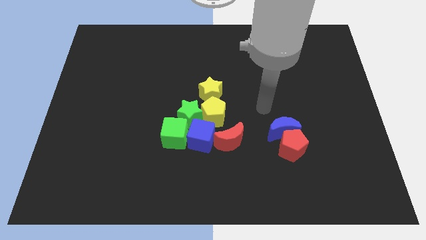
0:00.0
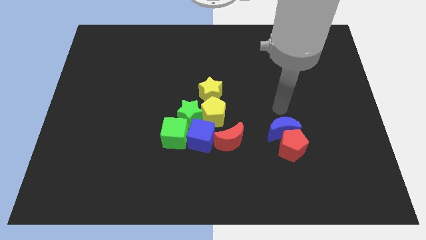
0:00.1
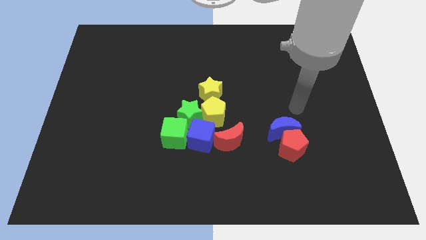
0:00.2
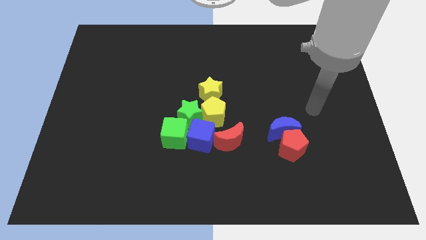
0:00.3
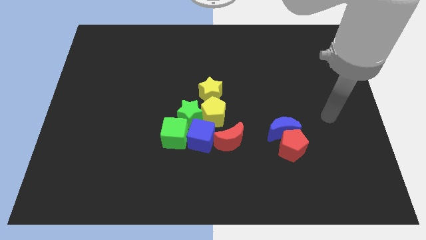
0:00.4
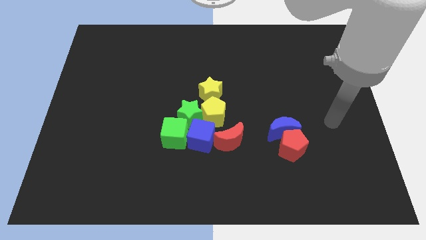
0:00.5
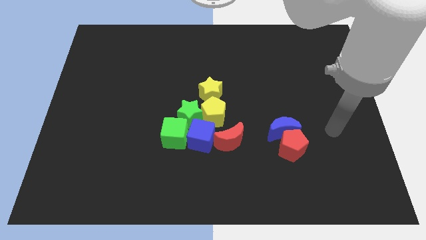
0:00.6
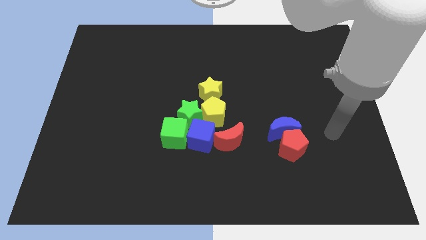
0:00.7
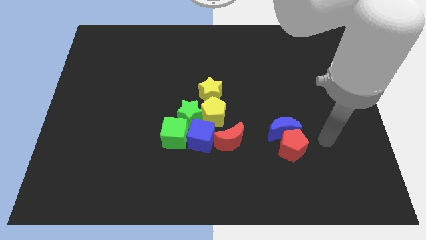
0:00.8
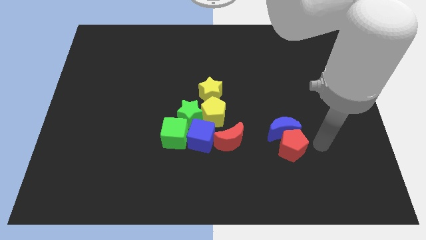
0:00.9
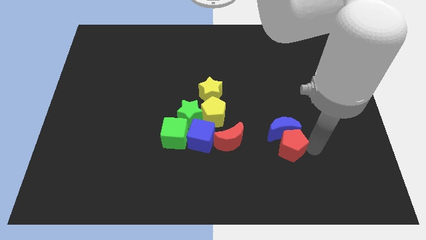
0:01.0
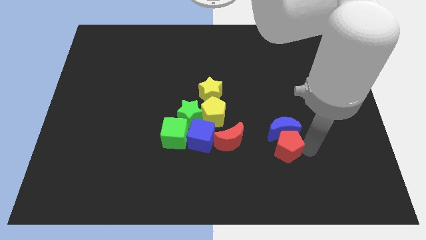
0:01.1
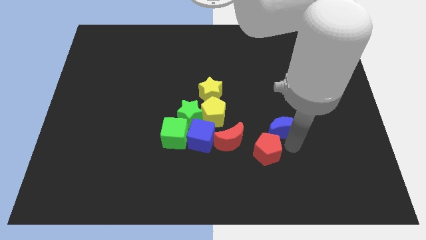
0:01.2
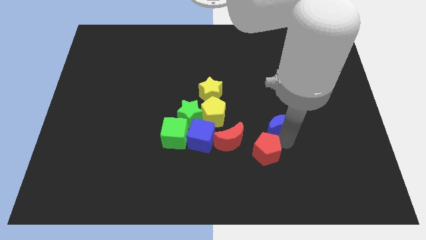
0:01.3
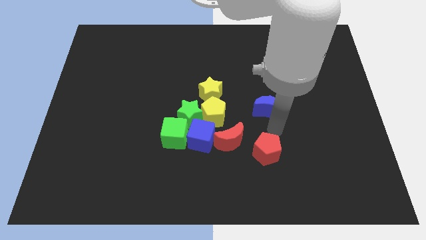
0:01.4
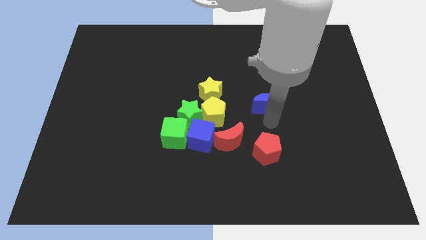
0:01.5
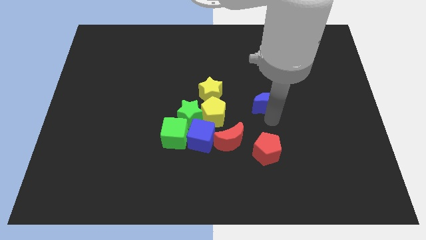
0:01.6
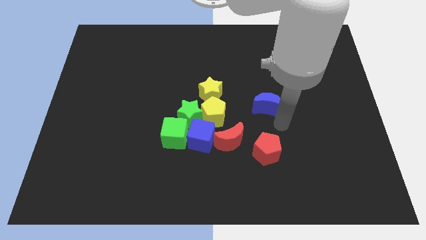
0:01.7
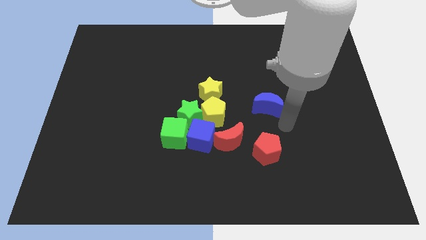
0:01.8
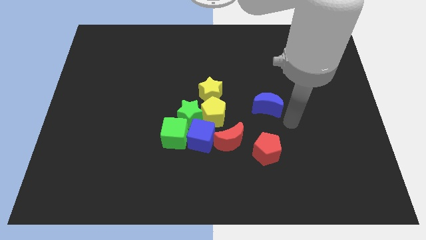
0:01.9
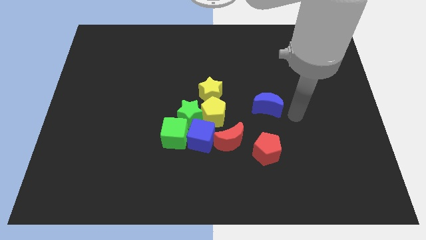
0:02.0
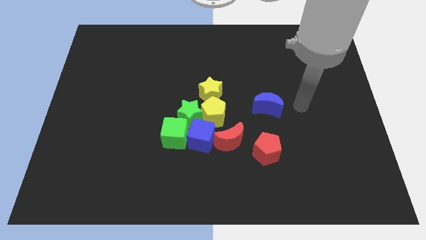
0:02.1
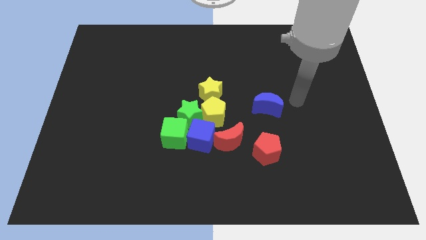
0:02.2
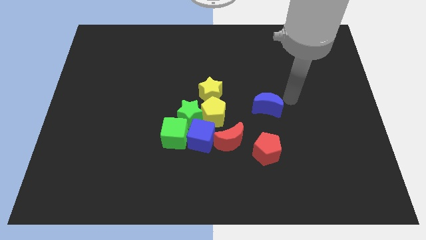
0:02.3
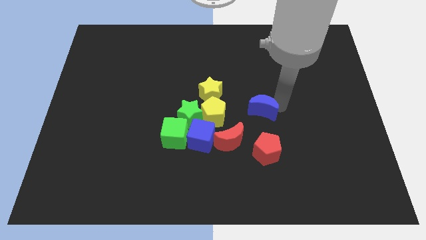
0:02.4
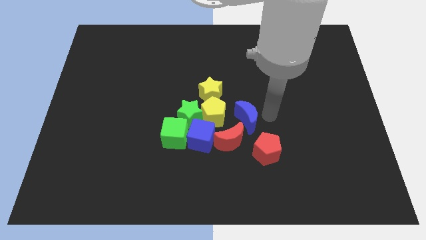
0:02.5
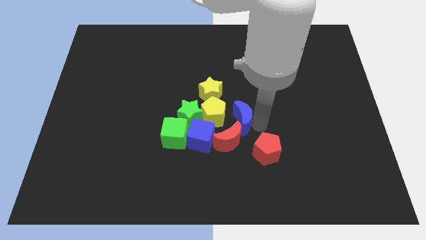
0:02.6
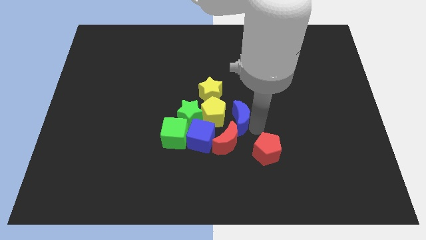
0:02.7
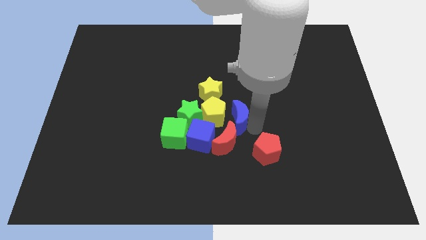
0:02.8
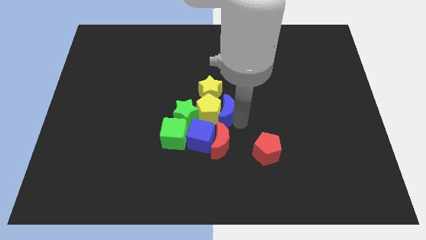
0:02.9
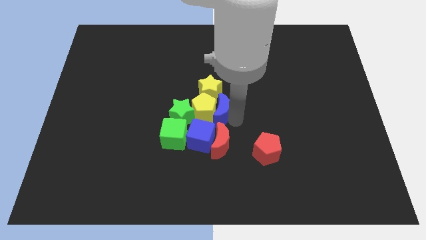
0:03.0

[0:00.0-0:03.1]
separate blue moon from red pentagon

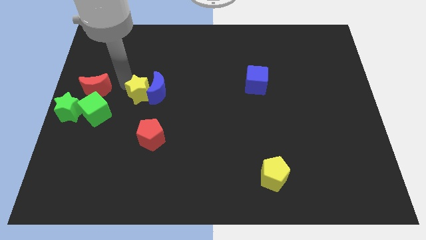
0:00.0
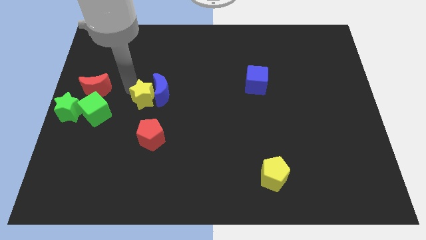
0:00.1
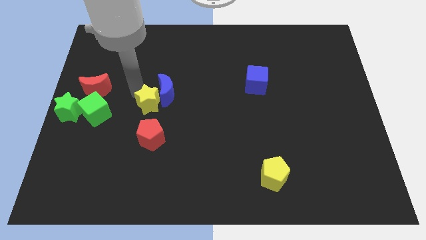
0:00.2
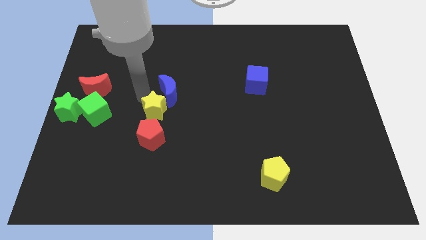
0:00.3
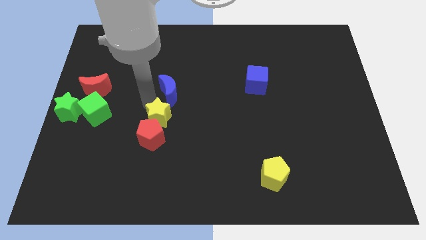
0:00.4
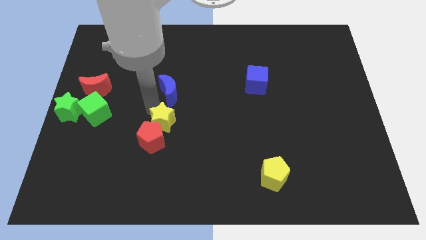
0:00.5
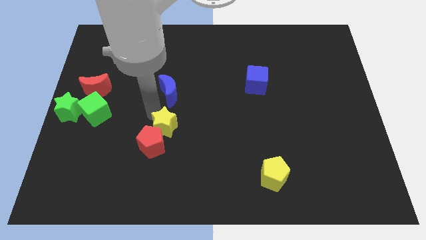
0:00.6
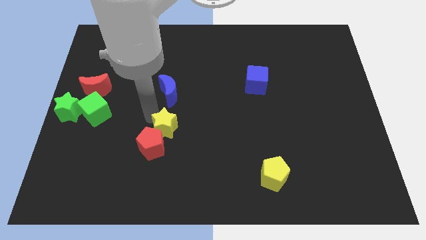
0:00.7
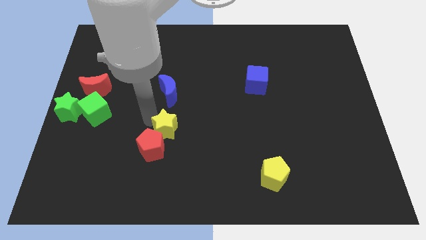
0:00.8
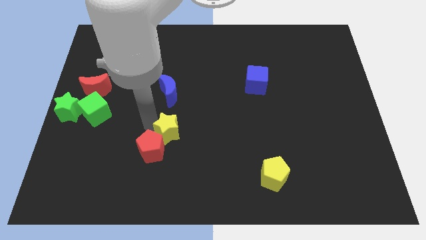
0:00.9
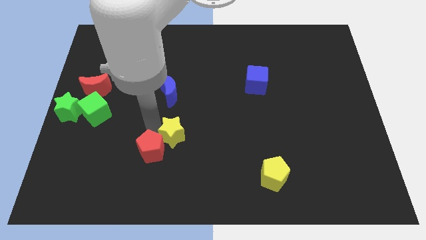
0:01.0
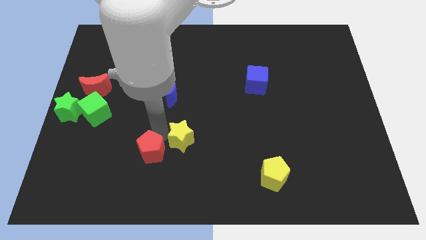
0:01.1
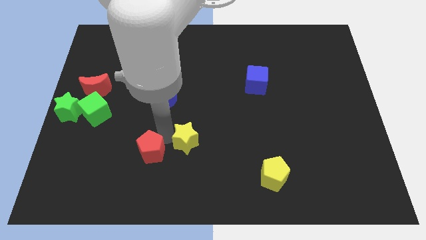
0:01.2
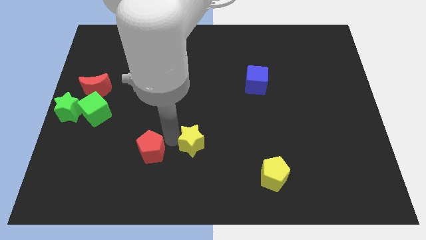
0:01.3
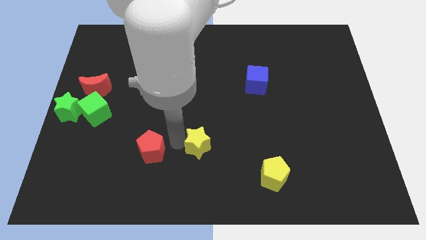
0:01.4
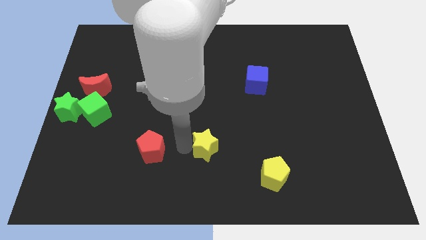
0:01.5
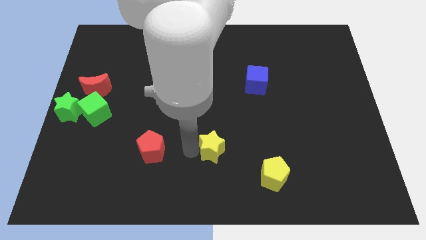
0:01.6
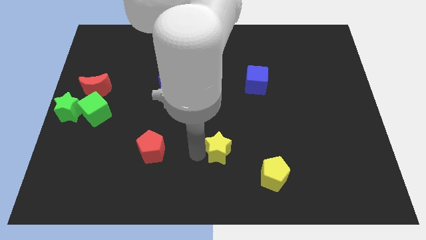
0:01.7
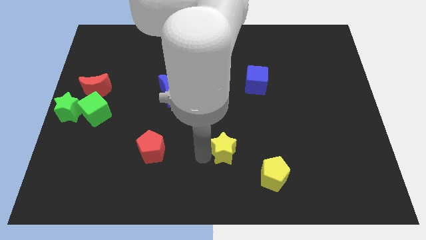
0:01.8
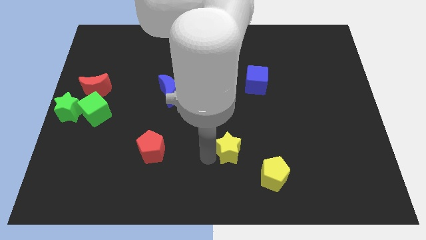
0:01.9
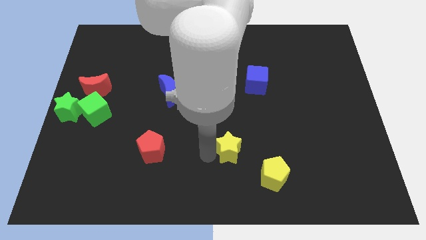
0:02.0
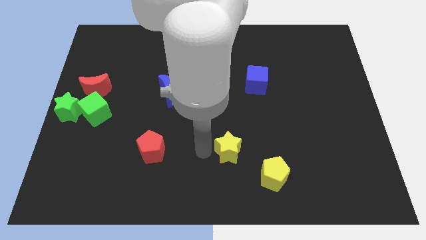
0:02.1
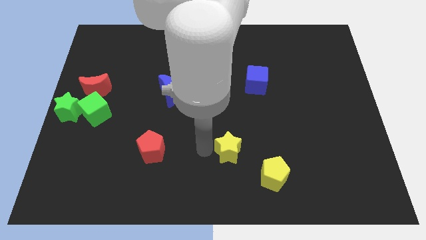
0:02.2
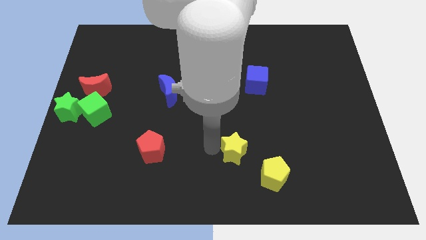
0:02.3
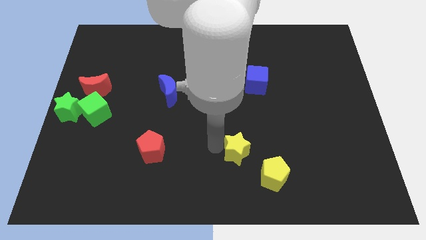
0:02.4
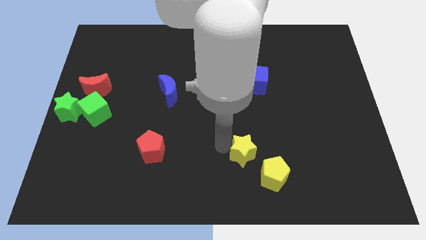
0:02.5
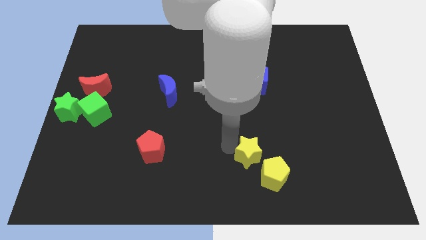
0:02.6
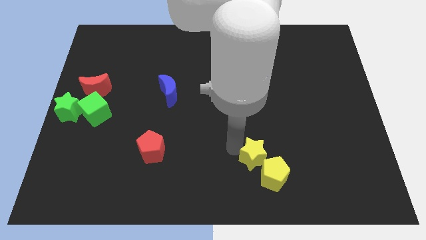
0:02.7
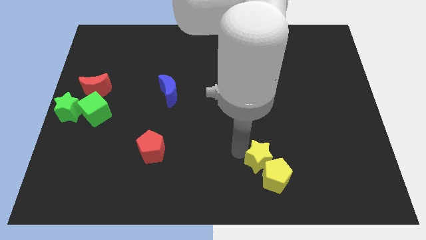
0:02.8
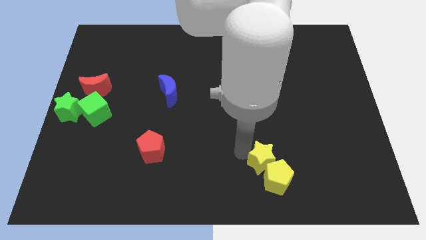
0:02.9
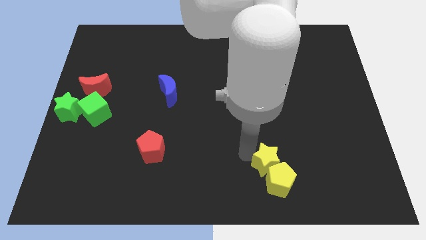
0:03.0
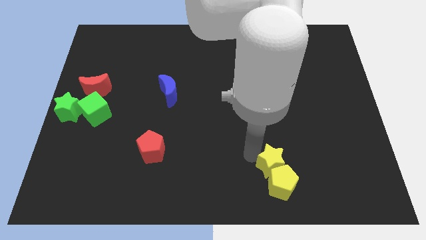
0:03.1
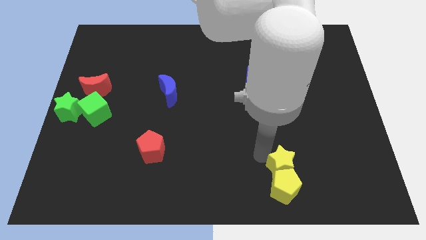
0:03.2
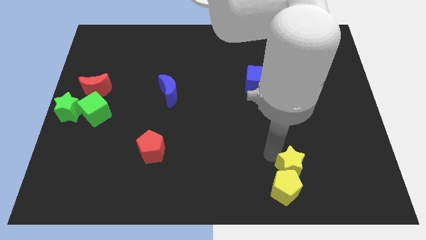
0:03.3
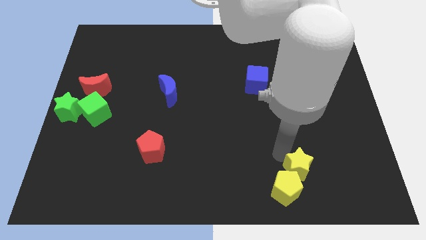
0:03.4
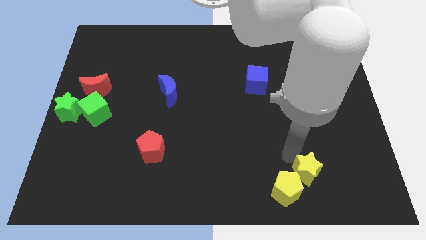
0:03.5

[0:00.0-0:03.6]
move the yellow star into the top right side of the yellow pentagon

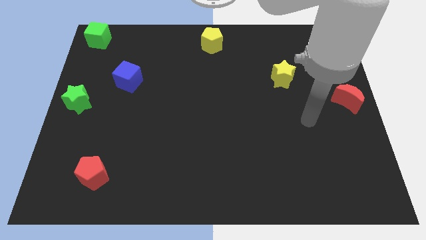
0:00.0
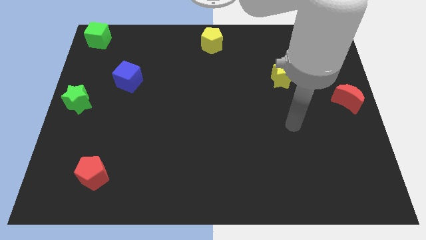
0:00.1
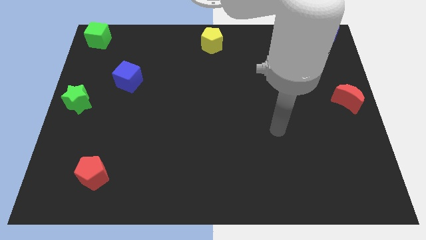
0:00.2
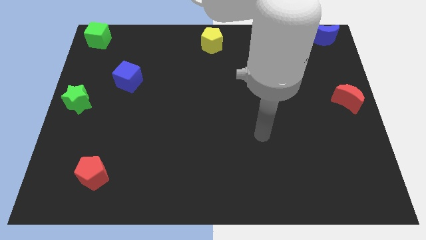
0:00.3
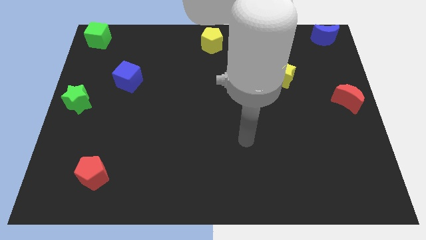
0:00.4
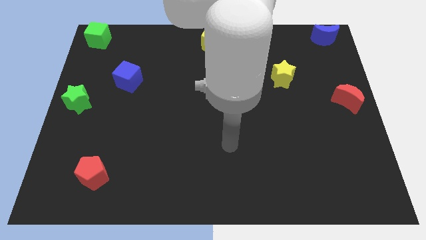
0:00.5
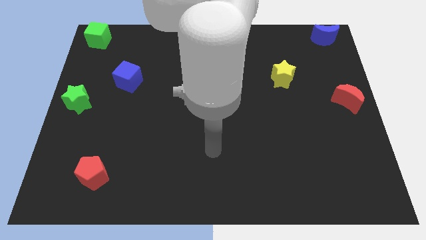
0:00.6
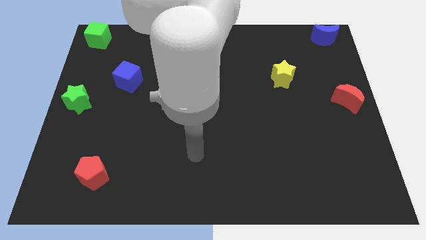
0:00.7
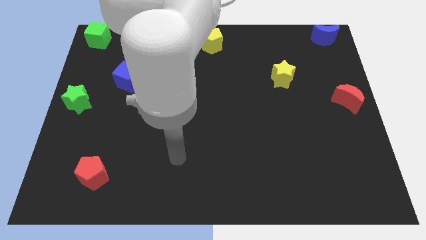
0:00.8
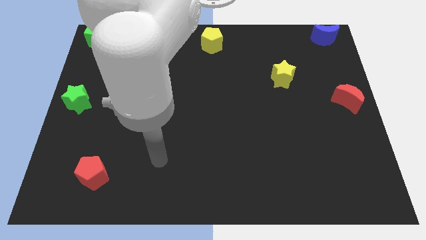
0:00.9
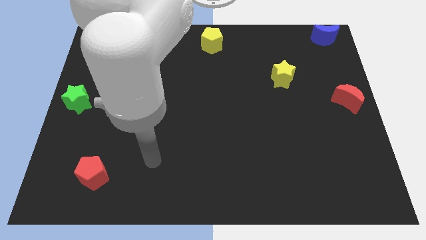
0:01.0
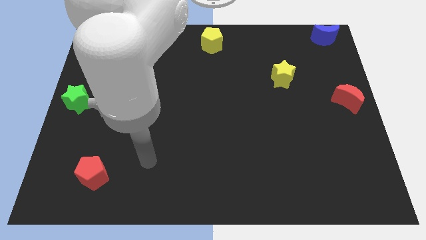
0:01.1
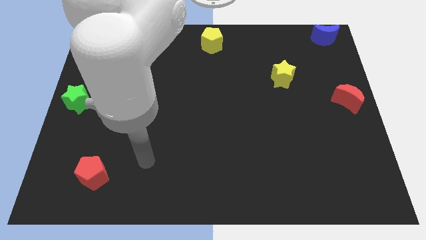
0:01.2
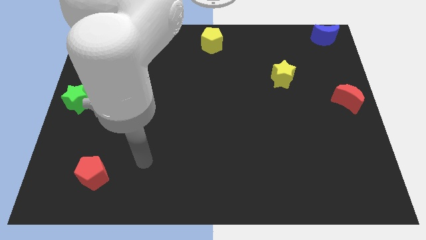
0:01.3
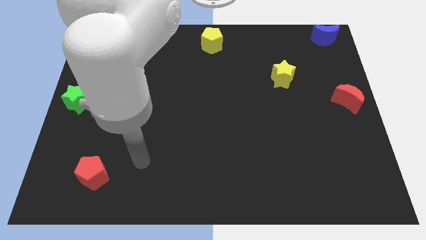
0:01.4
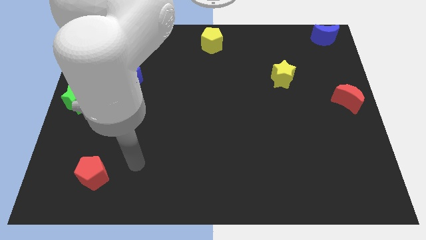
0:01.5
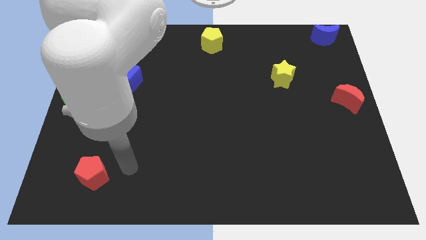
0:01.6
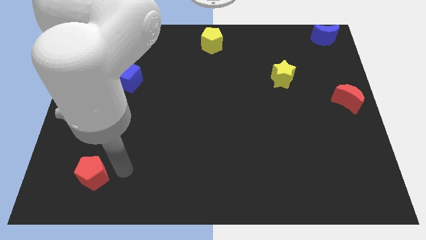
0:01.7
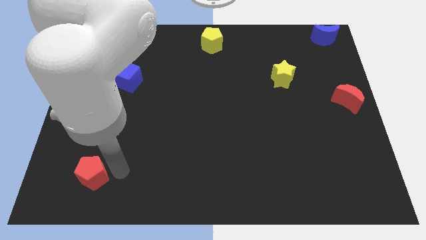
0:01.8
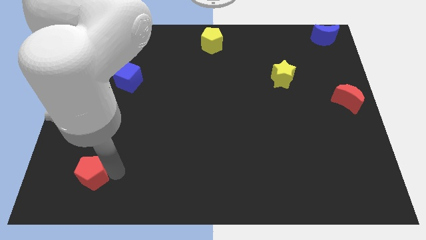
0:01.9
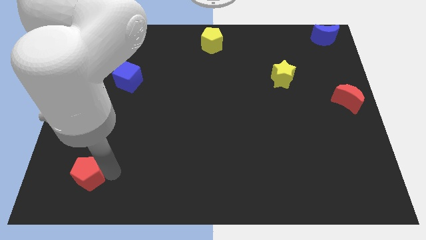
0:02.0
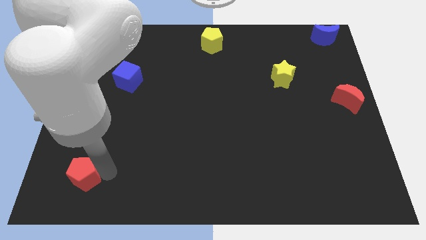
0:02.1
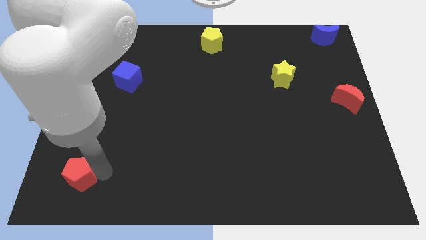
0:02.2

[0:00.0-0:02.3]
move your arm into the red pentagon
